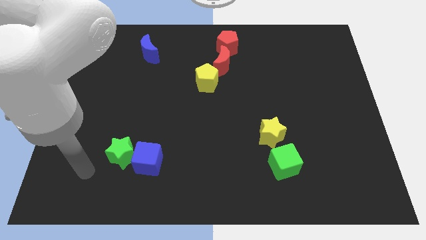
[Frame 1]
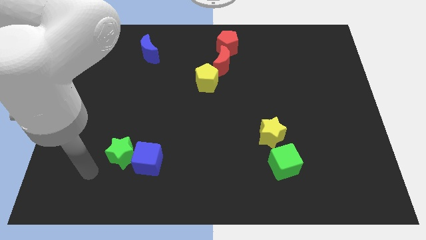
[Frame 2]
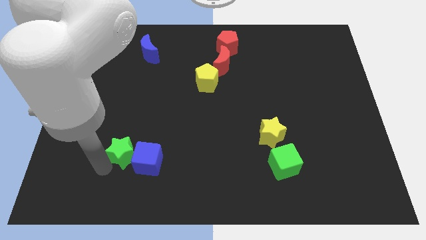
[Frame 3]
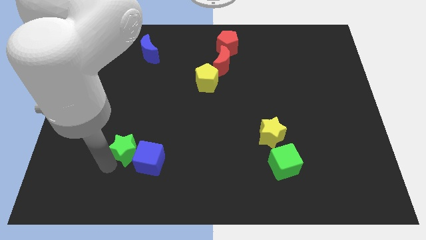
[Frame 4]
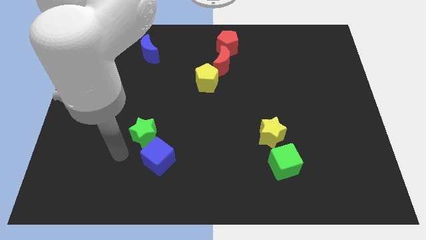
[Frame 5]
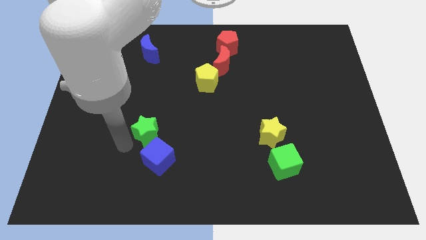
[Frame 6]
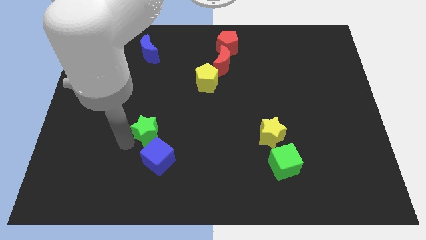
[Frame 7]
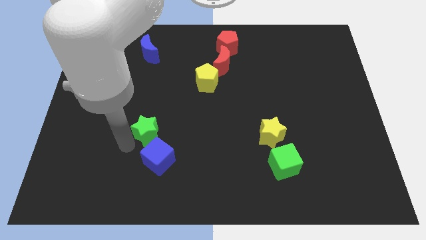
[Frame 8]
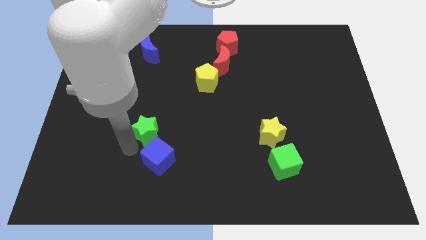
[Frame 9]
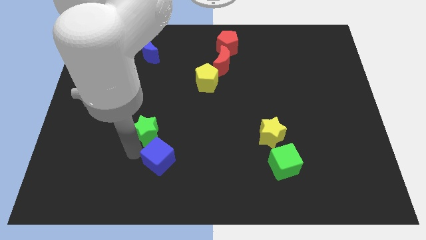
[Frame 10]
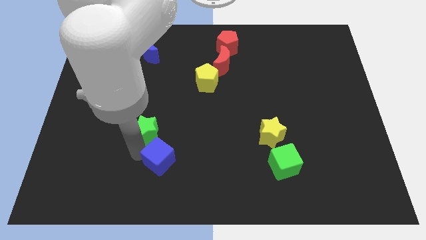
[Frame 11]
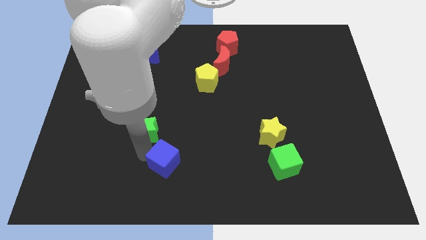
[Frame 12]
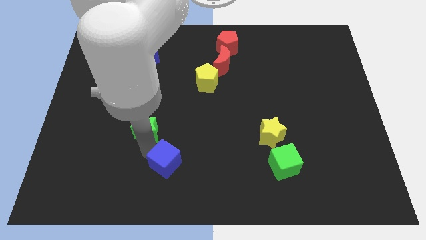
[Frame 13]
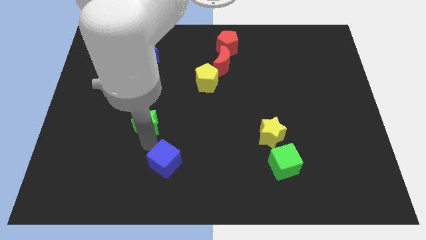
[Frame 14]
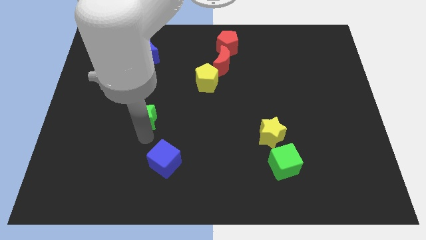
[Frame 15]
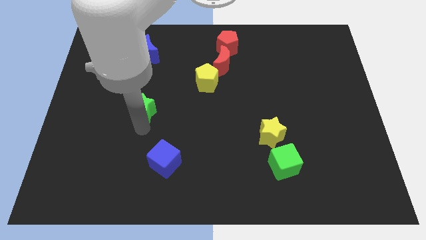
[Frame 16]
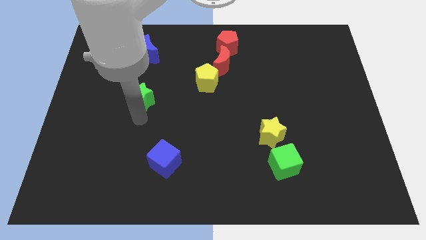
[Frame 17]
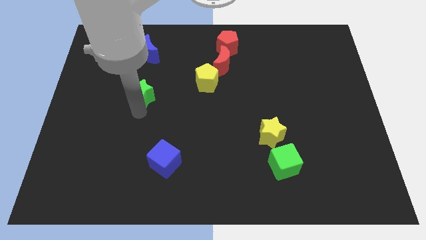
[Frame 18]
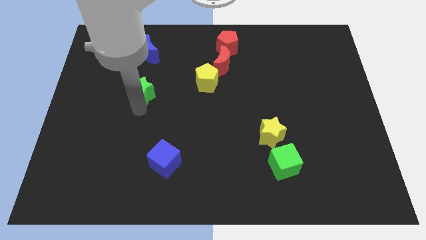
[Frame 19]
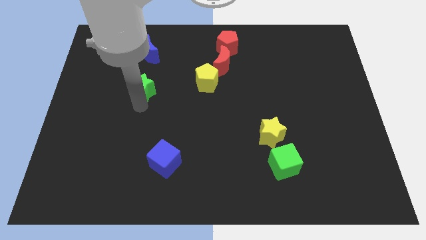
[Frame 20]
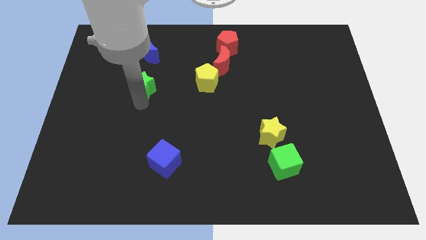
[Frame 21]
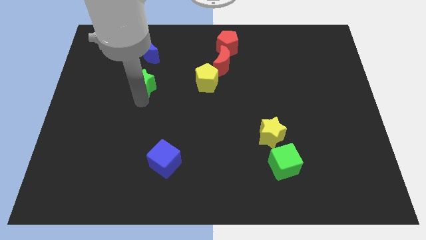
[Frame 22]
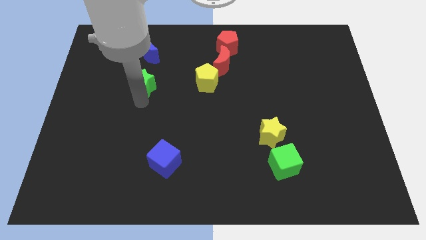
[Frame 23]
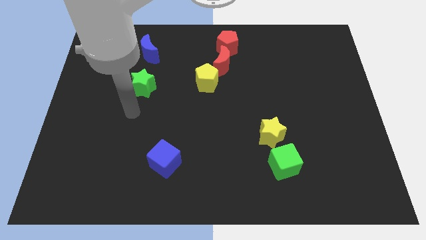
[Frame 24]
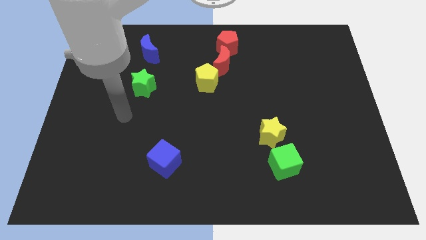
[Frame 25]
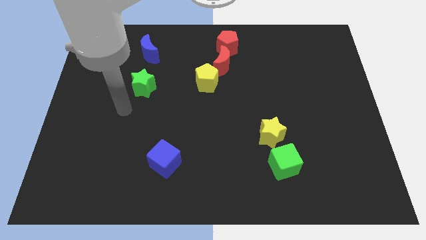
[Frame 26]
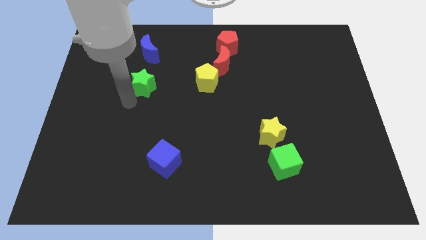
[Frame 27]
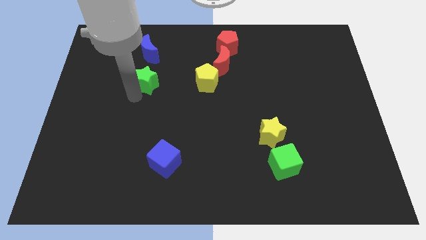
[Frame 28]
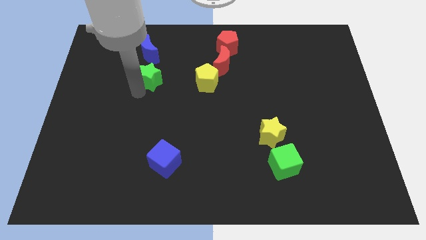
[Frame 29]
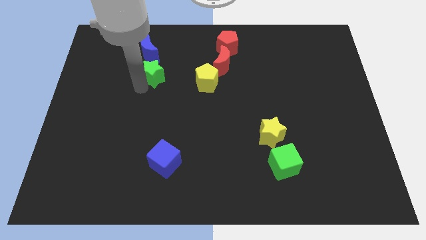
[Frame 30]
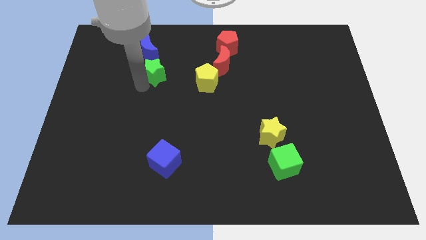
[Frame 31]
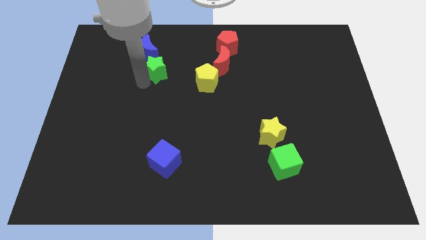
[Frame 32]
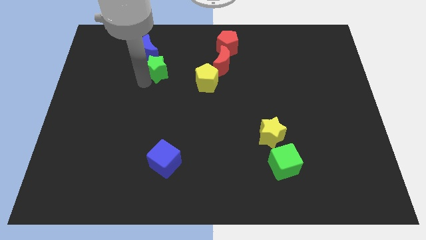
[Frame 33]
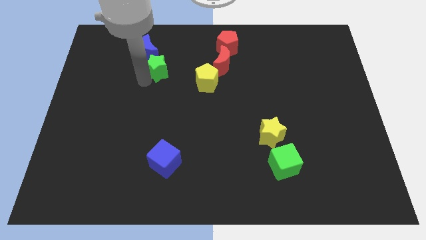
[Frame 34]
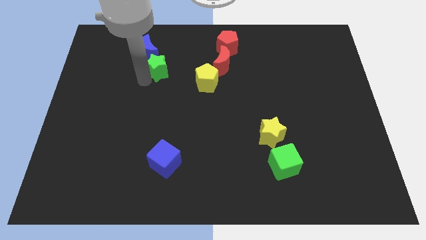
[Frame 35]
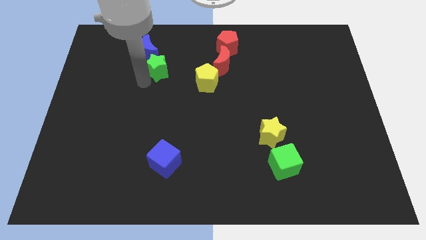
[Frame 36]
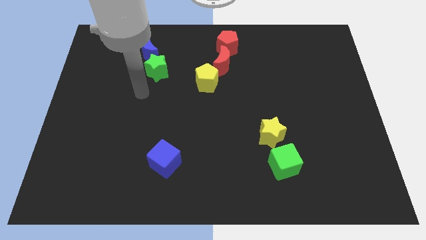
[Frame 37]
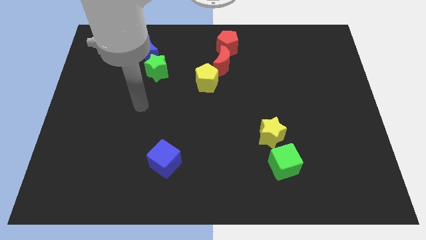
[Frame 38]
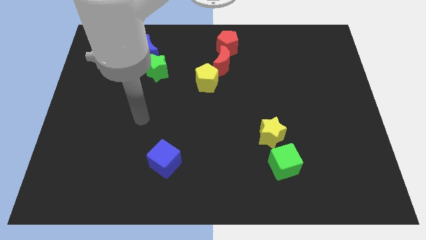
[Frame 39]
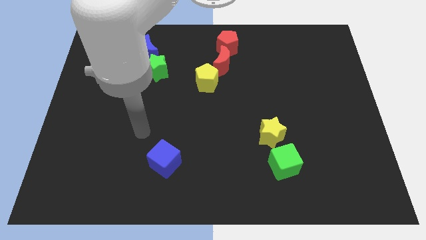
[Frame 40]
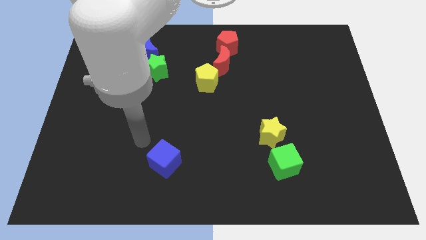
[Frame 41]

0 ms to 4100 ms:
place the green star to the bottom right side of the blue crescent

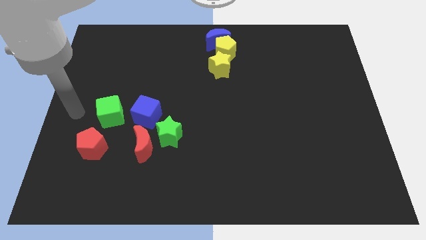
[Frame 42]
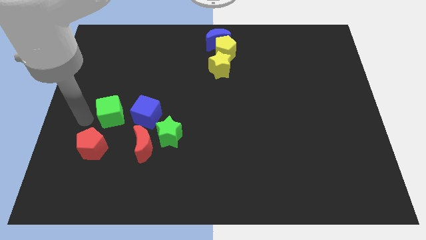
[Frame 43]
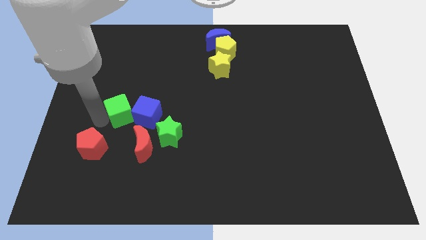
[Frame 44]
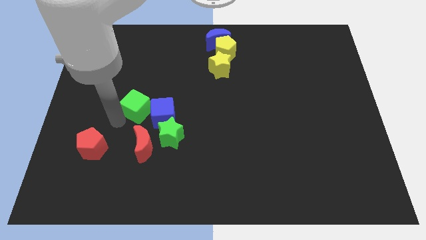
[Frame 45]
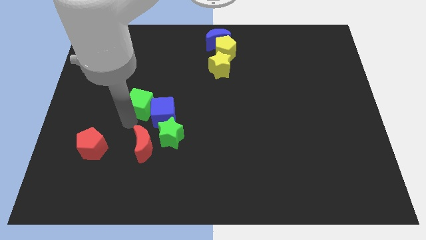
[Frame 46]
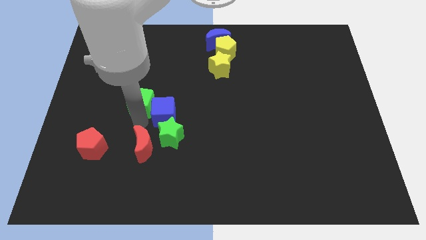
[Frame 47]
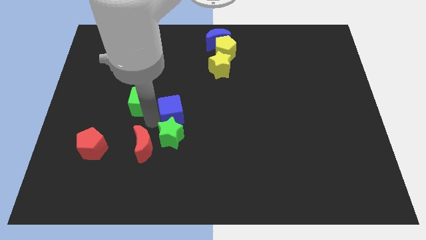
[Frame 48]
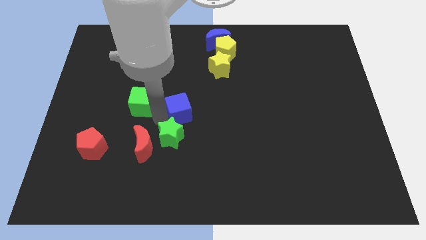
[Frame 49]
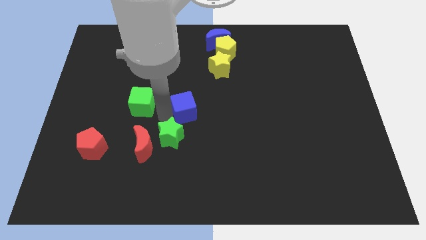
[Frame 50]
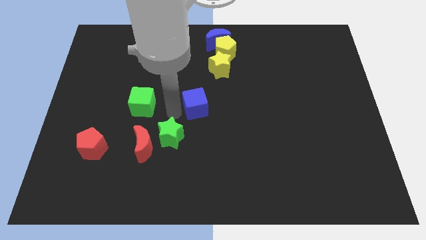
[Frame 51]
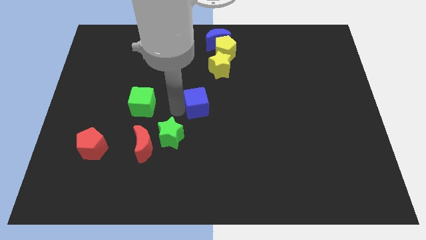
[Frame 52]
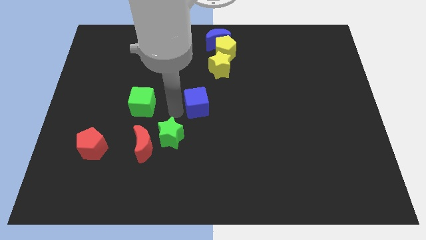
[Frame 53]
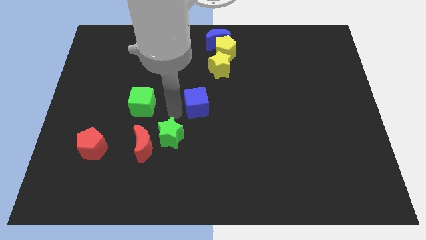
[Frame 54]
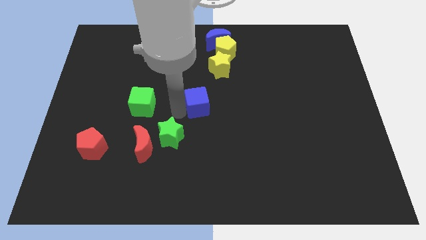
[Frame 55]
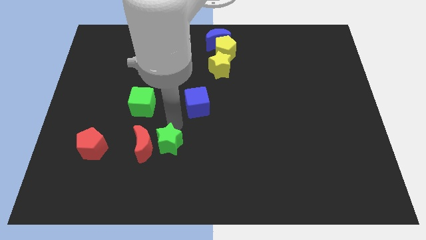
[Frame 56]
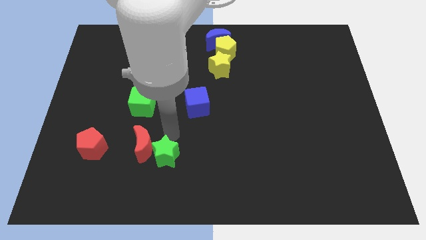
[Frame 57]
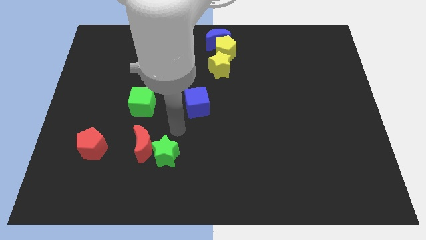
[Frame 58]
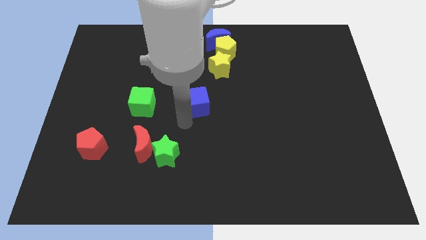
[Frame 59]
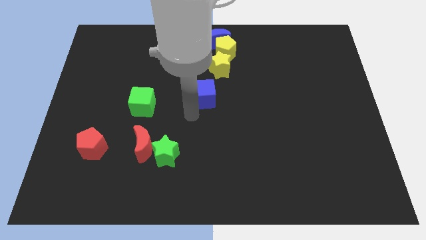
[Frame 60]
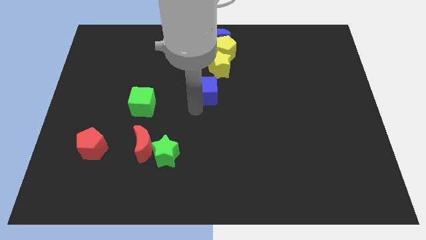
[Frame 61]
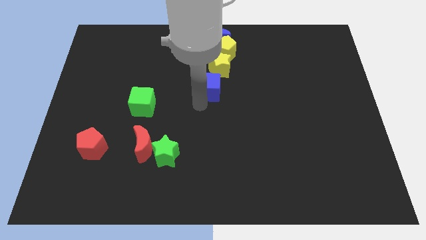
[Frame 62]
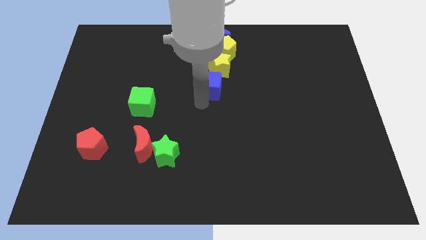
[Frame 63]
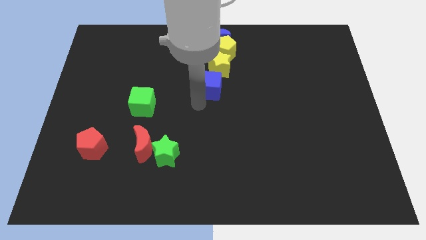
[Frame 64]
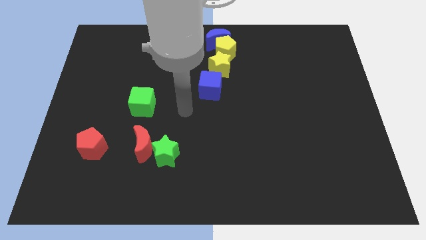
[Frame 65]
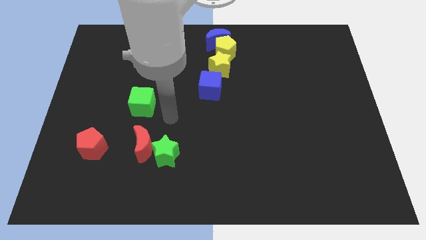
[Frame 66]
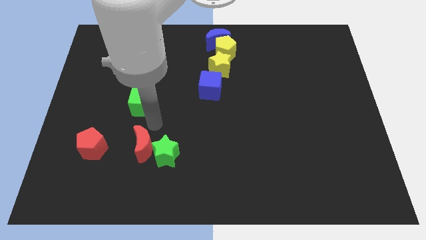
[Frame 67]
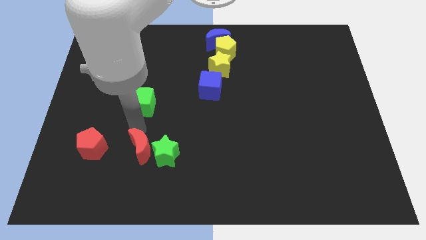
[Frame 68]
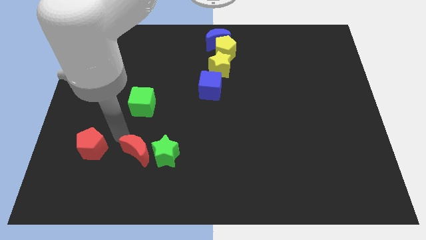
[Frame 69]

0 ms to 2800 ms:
push blue cube into the group of blocks slightly move red moon

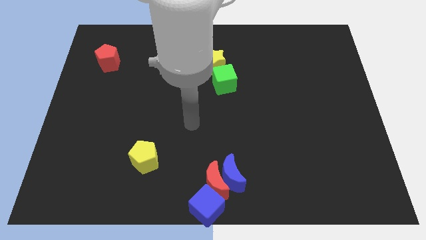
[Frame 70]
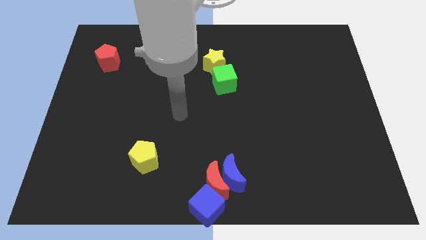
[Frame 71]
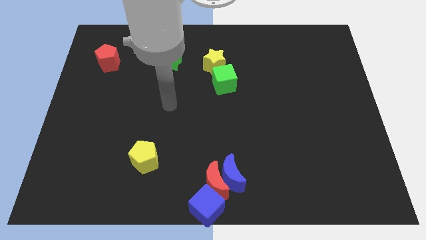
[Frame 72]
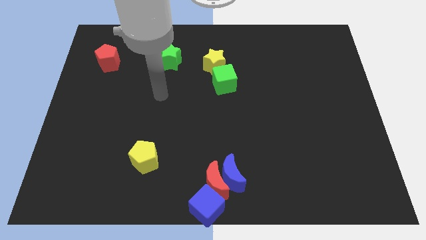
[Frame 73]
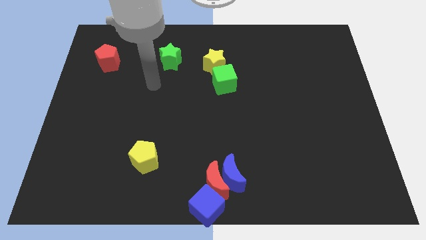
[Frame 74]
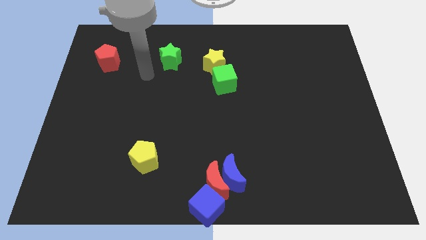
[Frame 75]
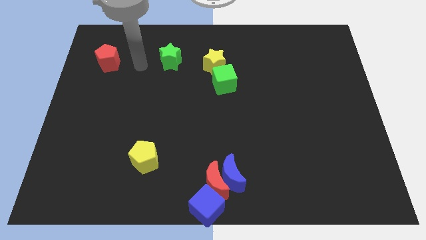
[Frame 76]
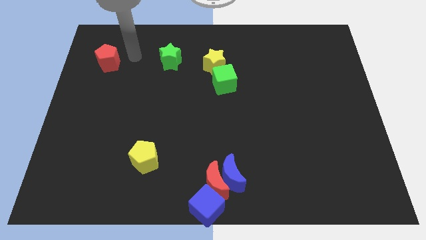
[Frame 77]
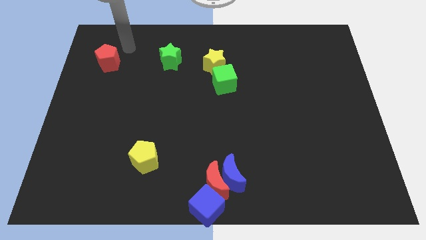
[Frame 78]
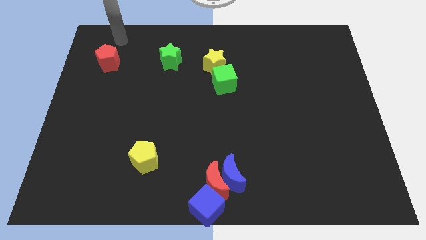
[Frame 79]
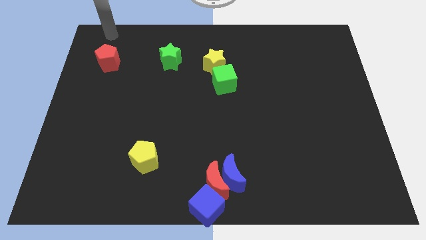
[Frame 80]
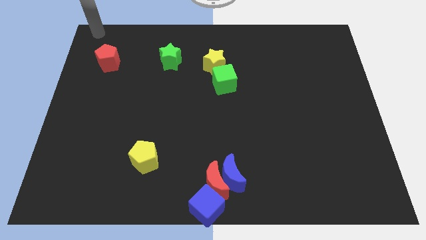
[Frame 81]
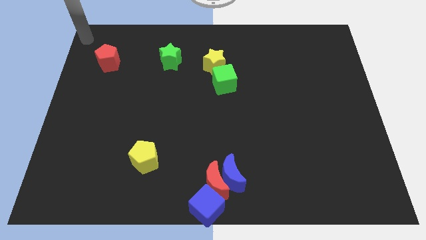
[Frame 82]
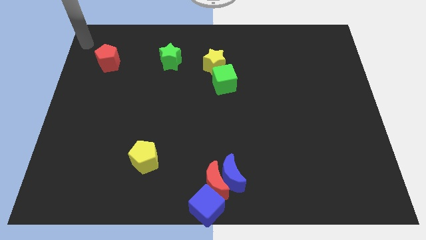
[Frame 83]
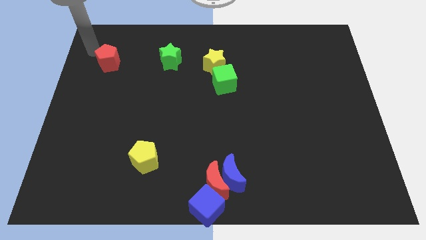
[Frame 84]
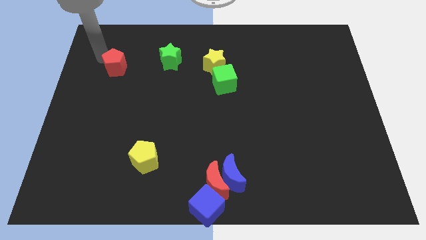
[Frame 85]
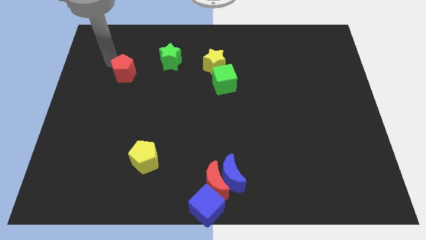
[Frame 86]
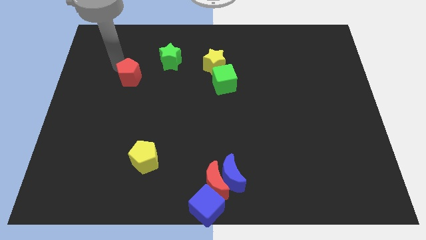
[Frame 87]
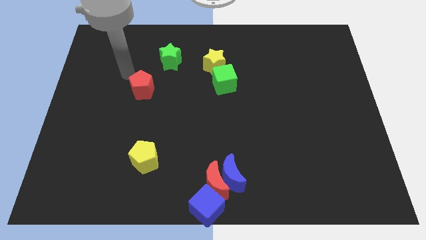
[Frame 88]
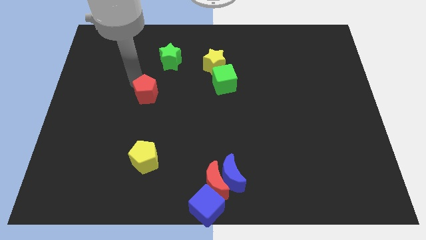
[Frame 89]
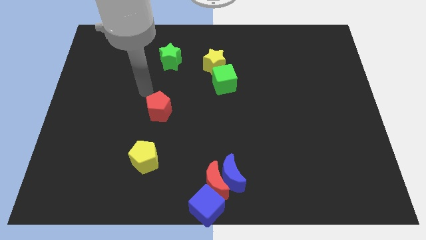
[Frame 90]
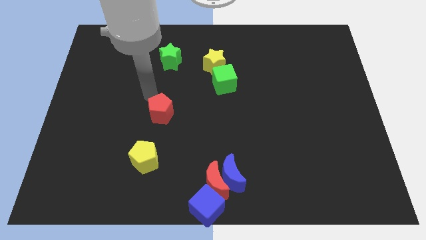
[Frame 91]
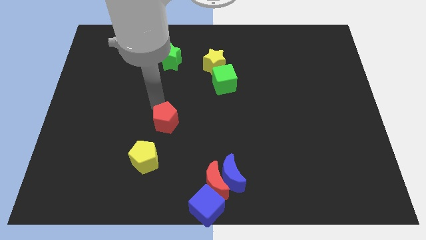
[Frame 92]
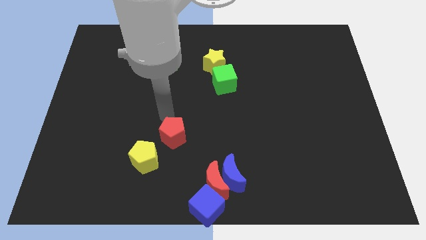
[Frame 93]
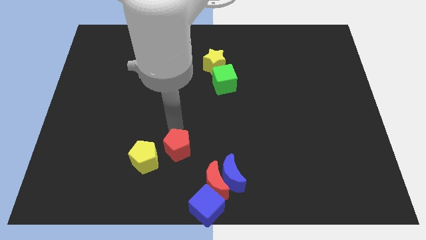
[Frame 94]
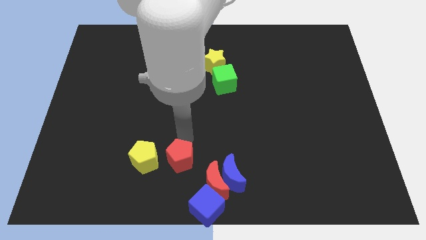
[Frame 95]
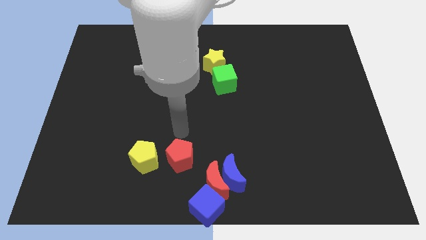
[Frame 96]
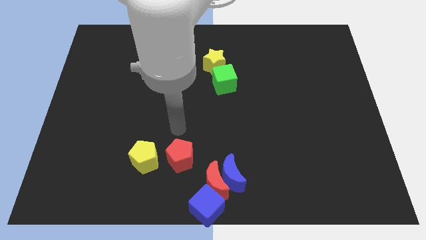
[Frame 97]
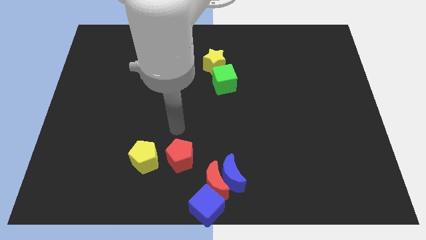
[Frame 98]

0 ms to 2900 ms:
move the red pentagon to the top side of the red moon
